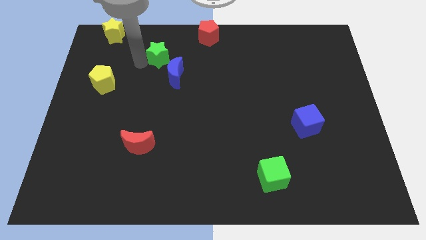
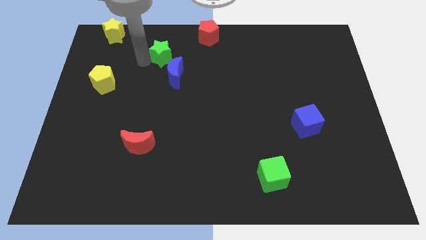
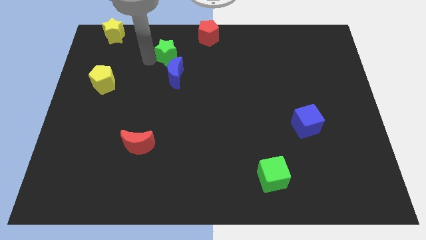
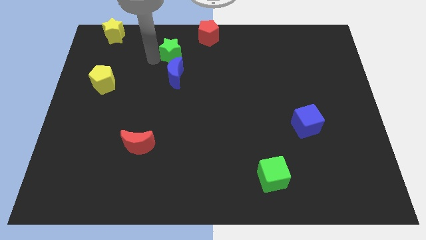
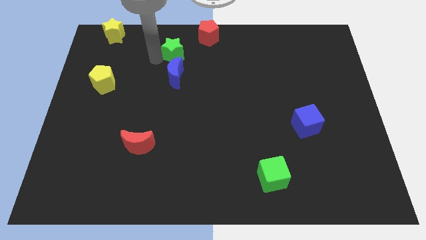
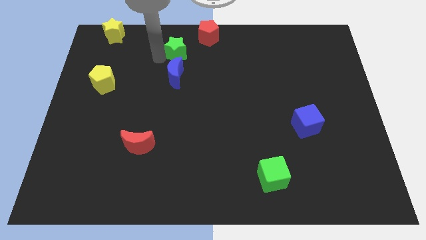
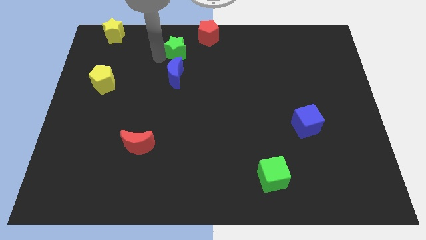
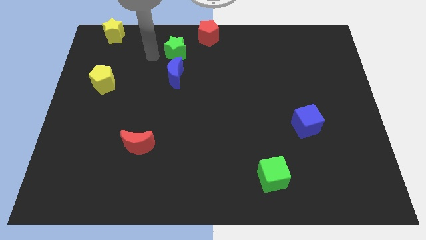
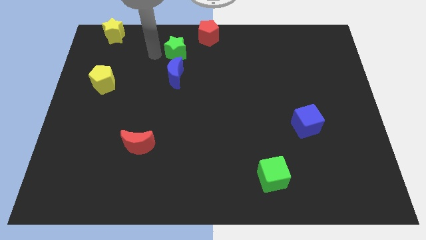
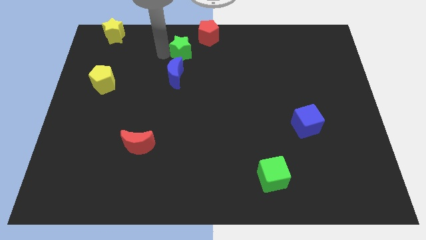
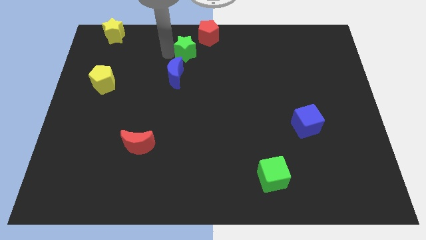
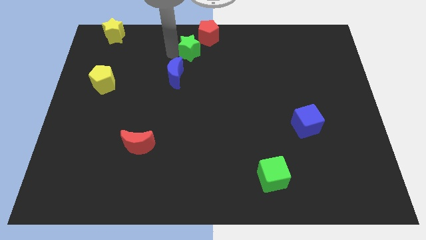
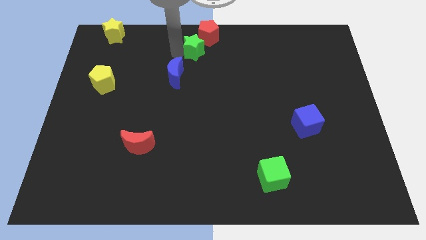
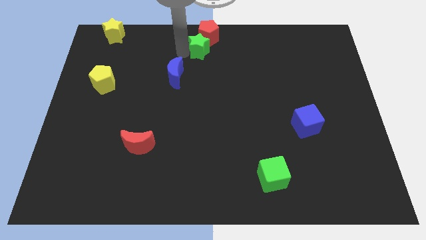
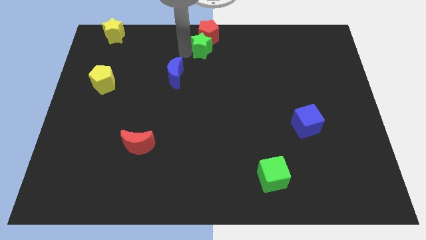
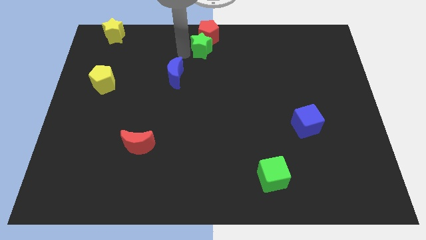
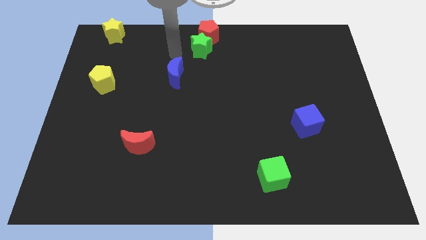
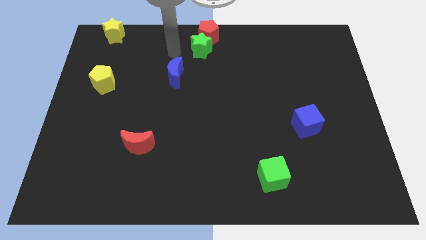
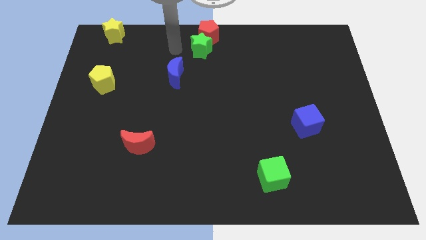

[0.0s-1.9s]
place the green star below the red pentagon

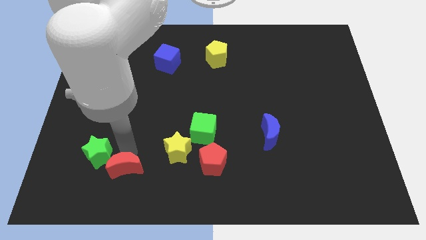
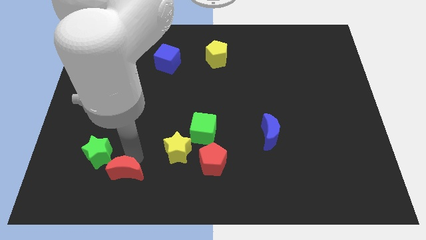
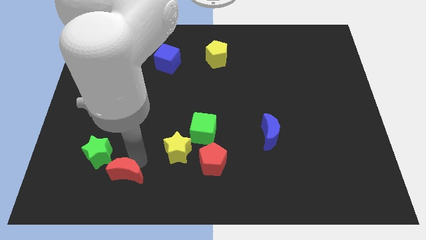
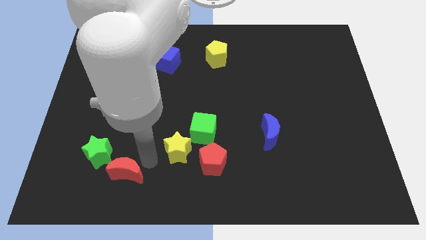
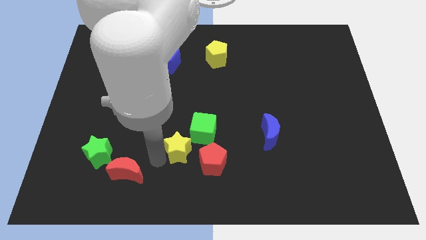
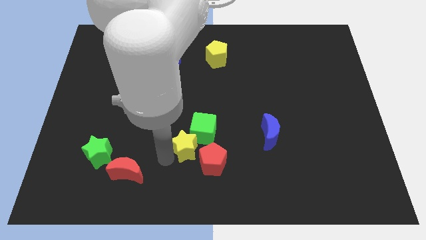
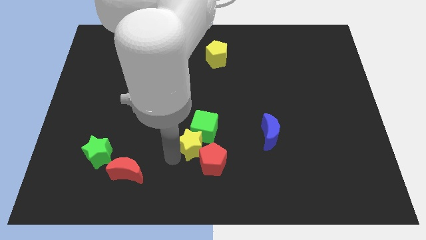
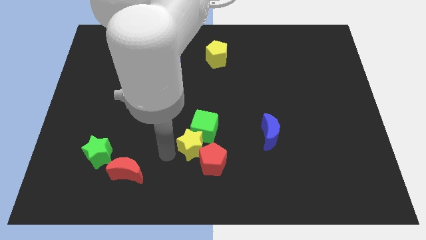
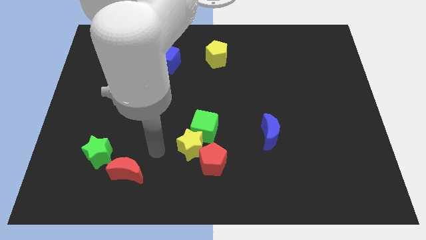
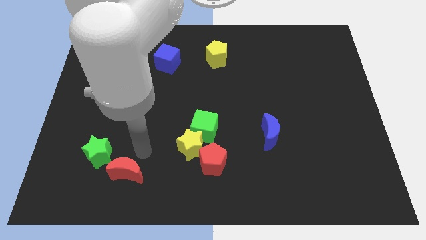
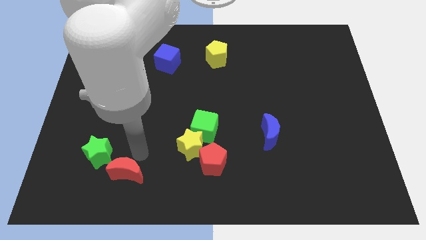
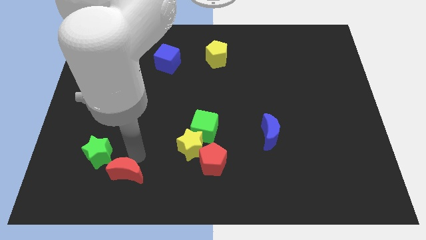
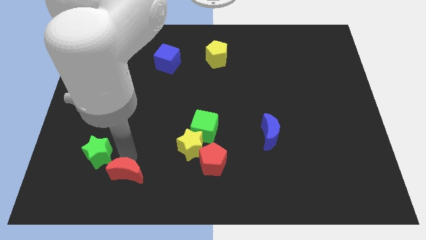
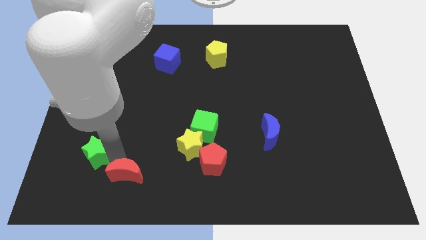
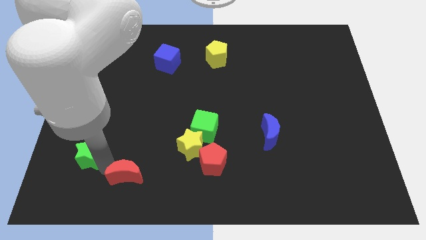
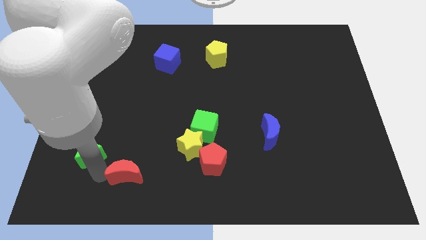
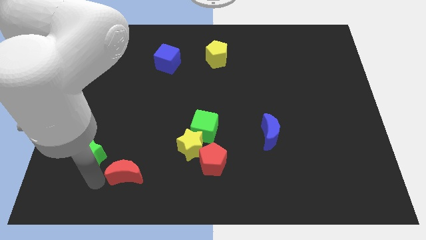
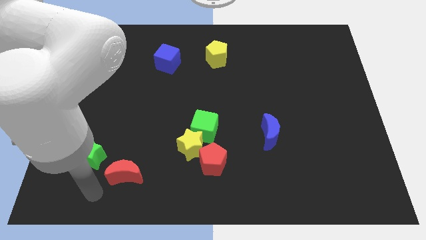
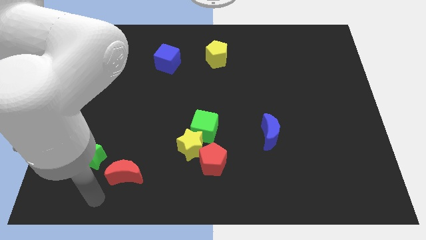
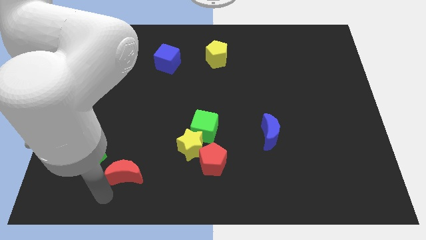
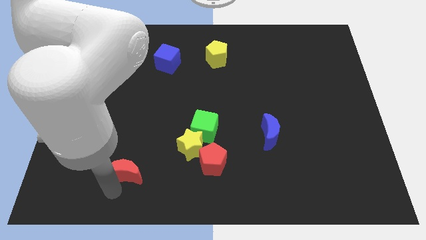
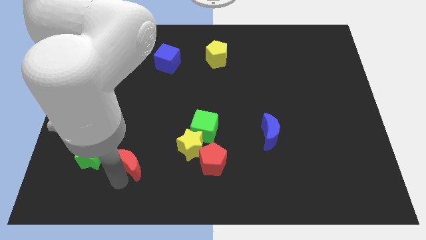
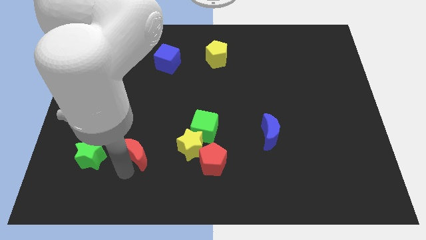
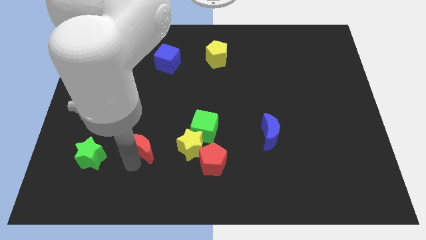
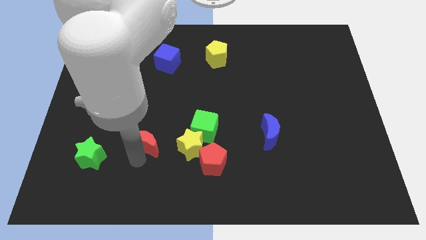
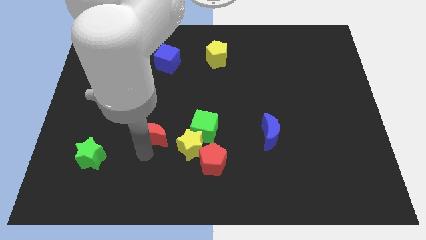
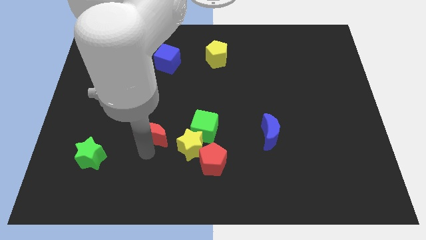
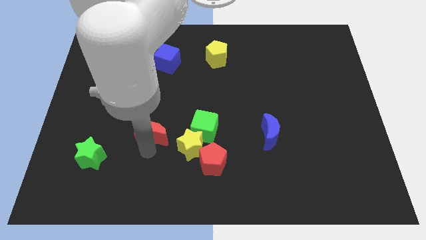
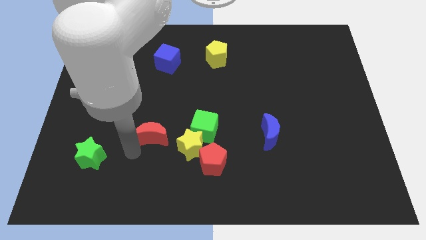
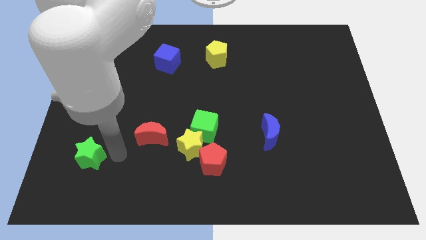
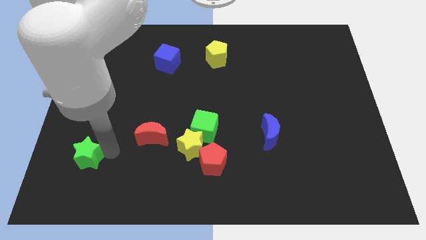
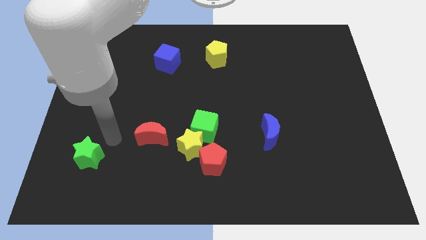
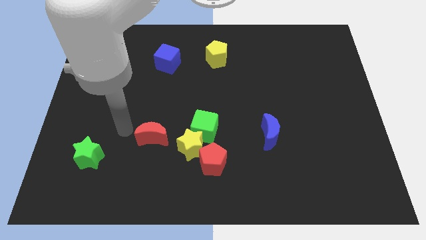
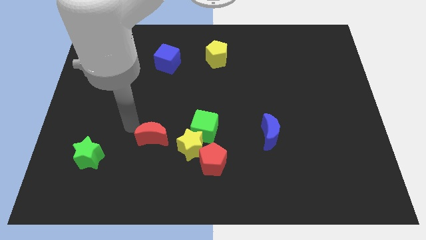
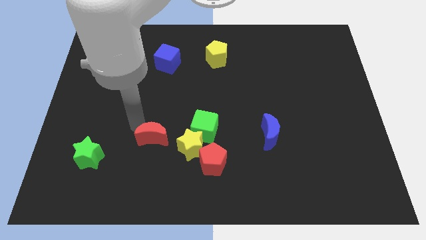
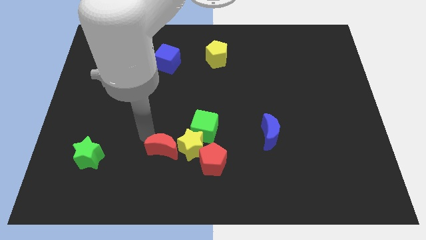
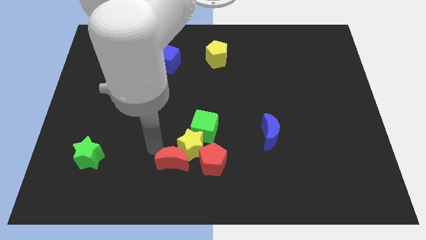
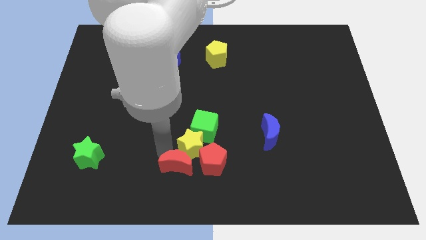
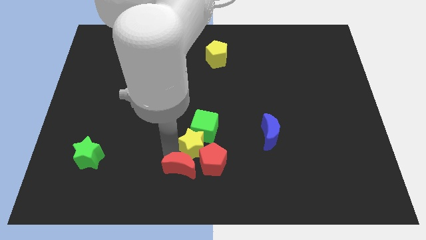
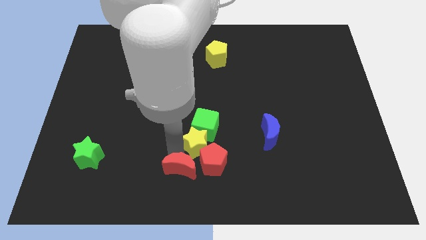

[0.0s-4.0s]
place the red moon into a group of blocks

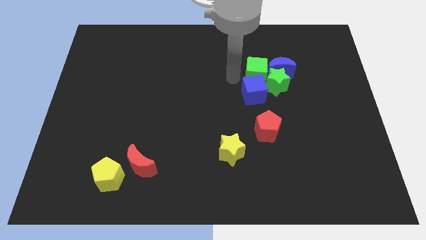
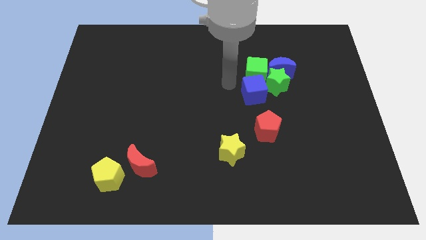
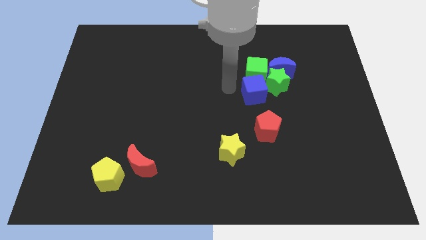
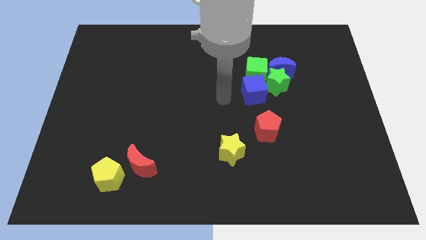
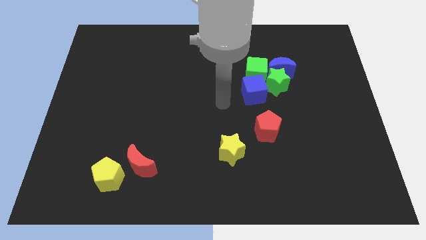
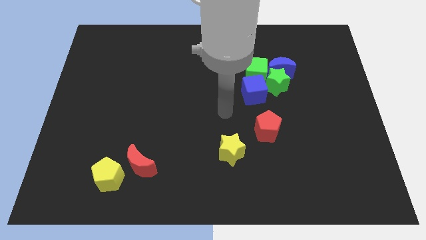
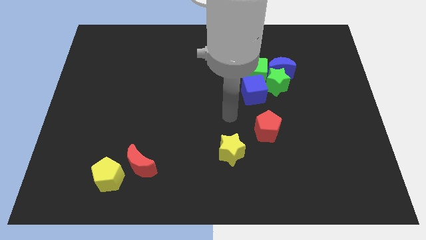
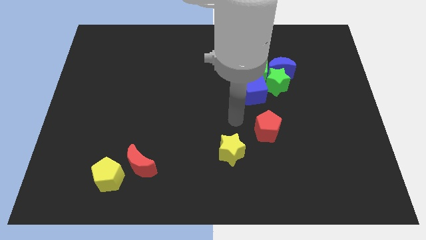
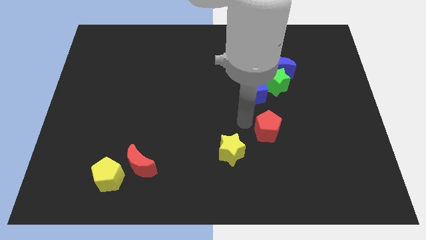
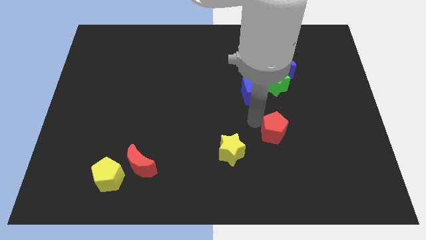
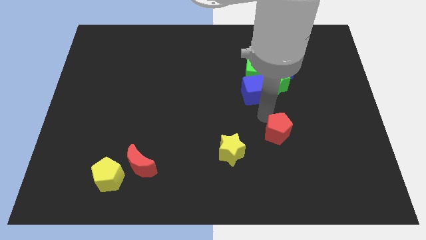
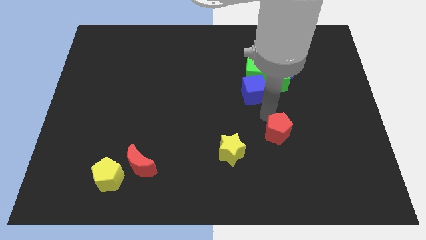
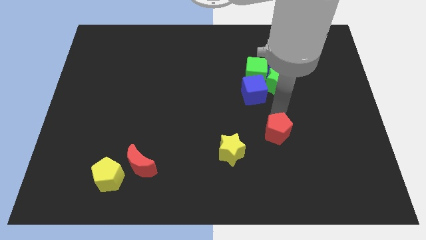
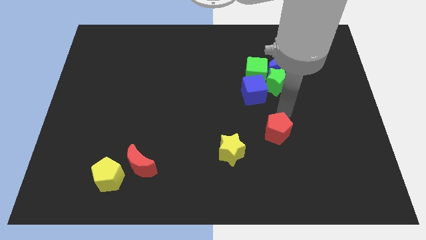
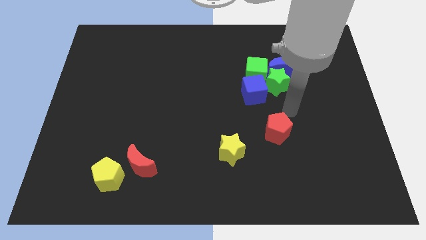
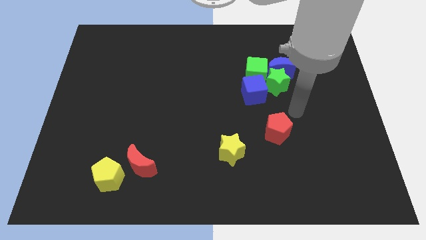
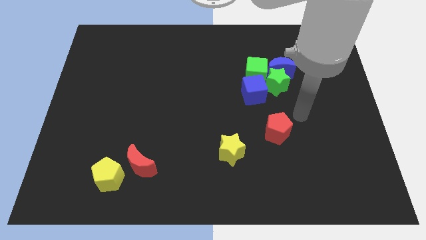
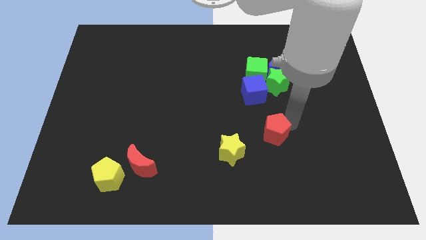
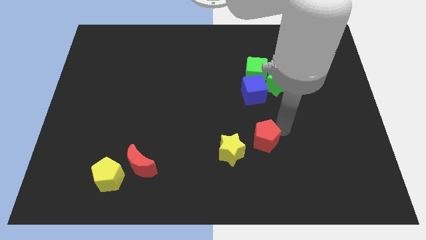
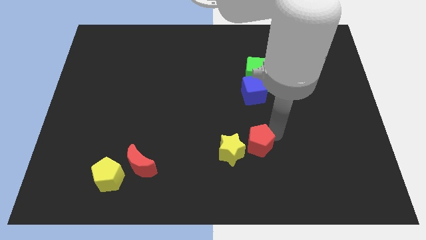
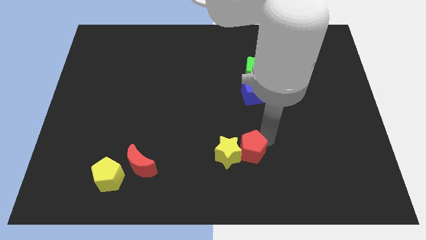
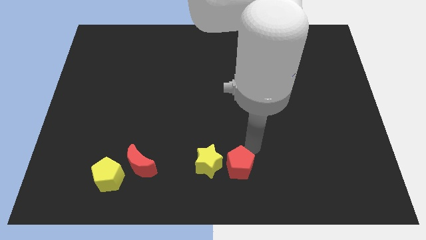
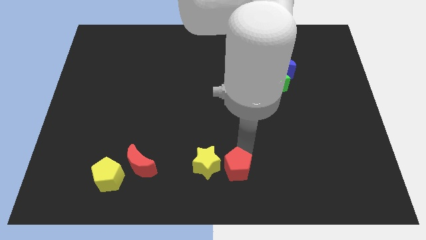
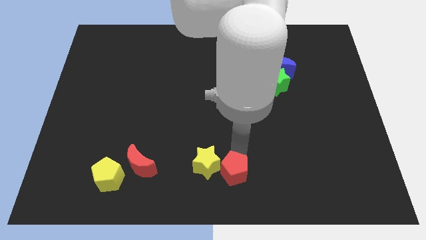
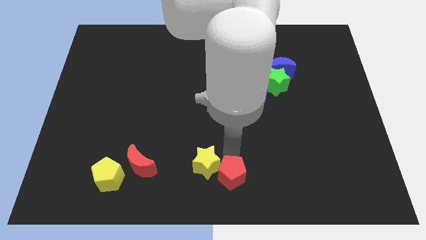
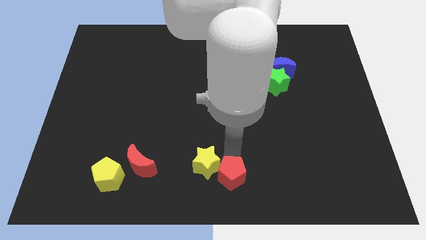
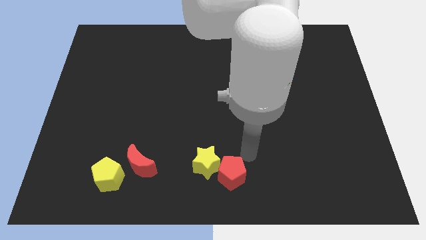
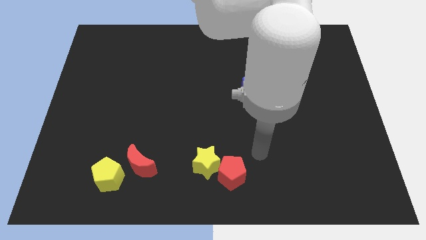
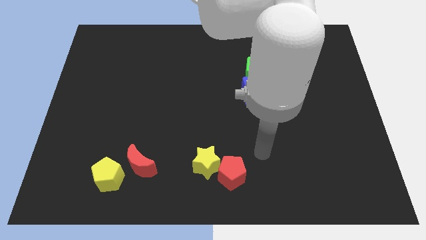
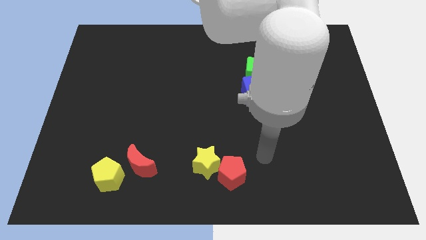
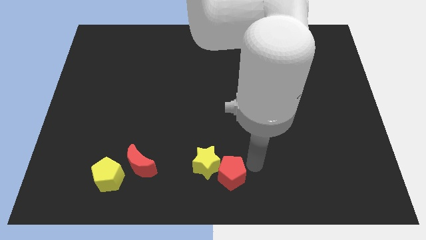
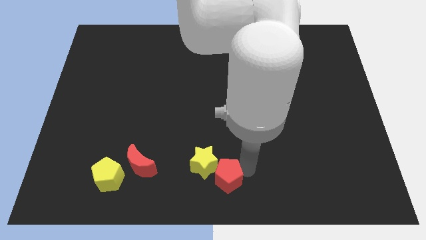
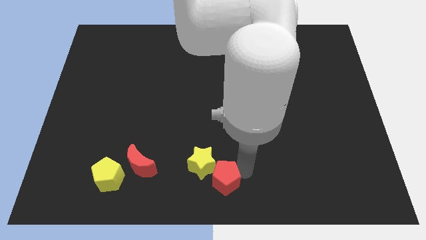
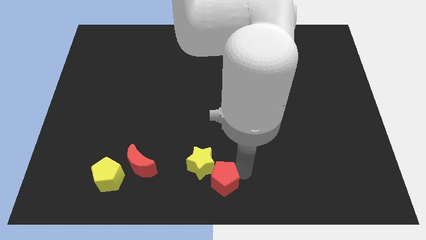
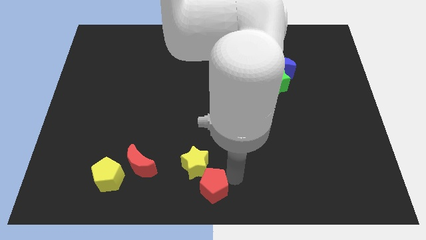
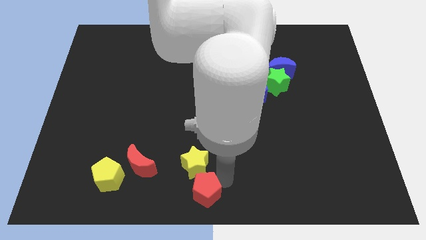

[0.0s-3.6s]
push the red pentagon towards the bottom center
